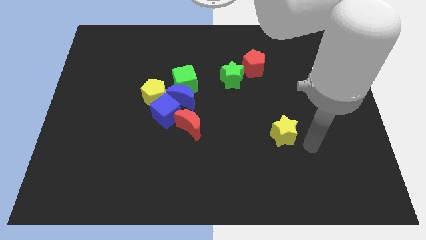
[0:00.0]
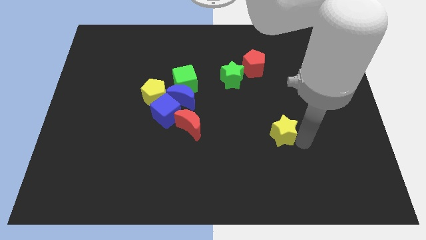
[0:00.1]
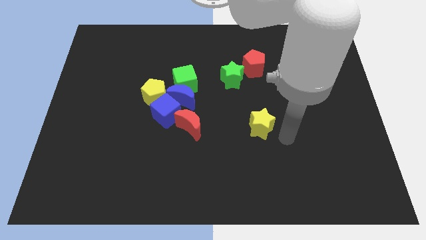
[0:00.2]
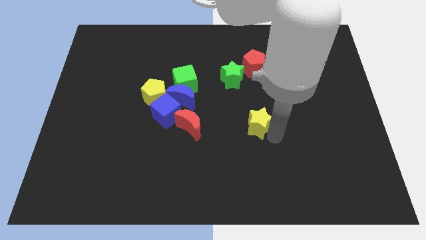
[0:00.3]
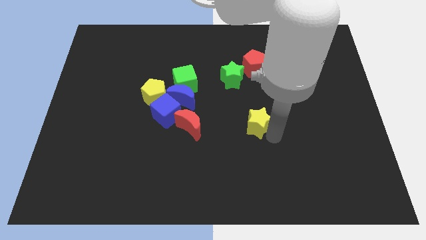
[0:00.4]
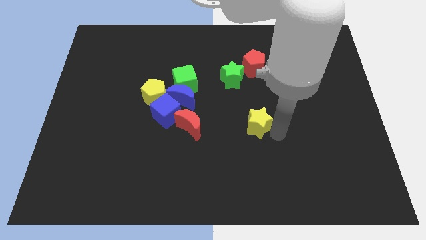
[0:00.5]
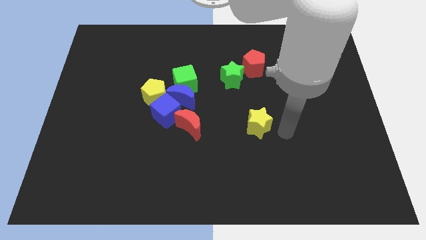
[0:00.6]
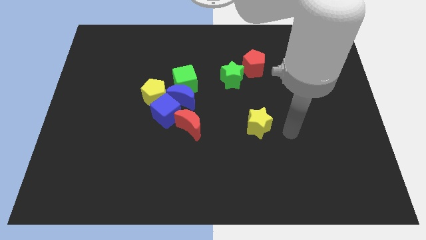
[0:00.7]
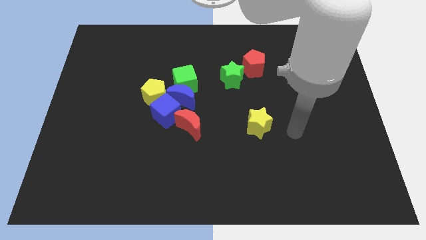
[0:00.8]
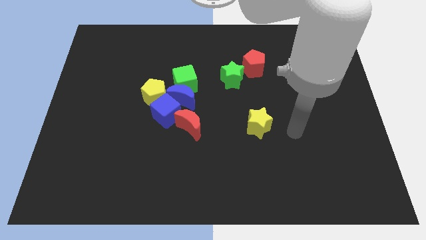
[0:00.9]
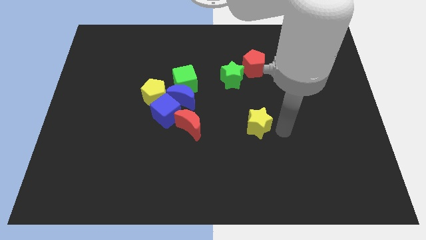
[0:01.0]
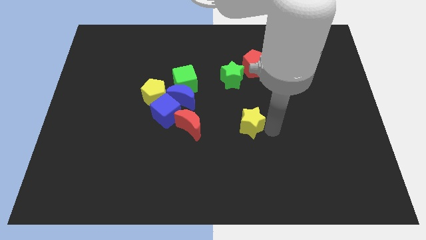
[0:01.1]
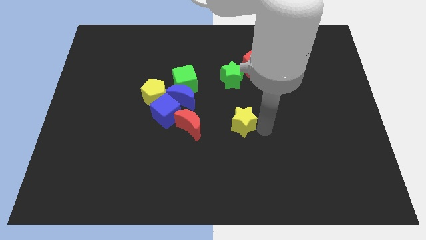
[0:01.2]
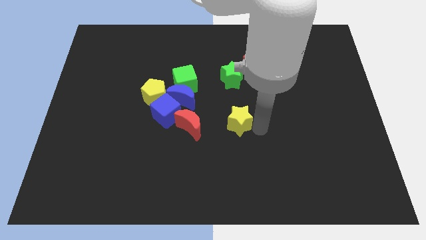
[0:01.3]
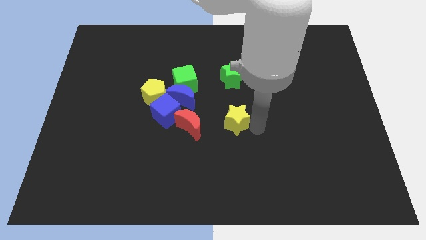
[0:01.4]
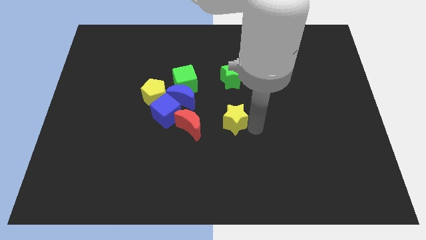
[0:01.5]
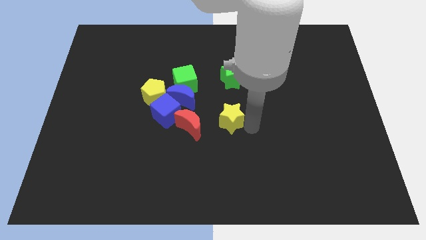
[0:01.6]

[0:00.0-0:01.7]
move the yellow star to the center of the board

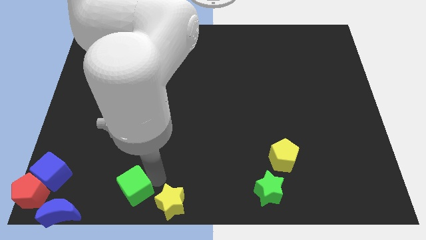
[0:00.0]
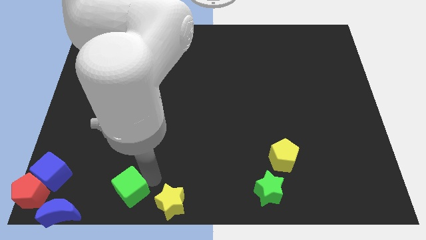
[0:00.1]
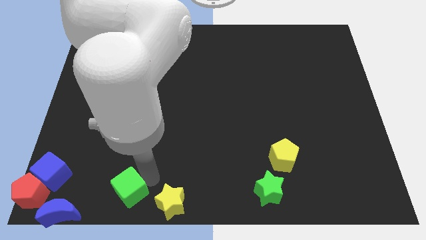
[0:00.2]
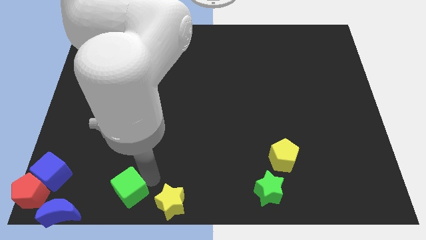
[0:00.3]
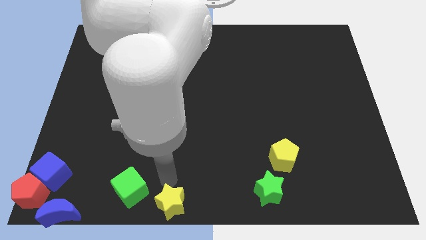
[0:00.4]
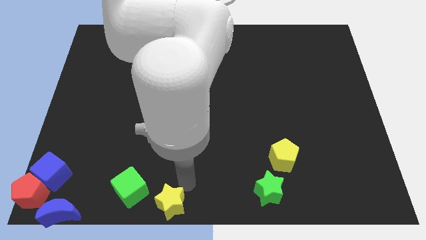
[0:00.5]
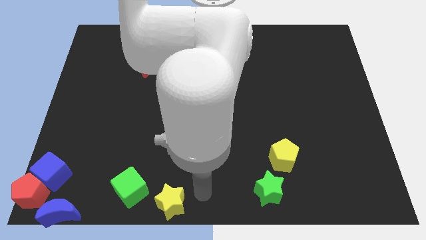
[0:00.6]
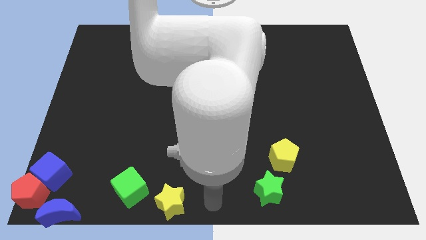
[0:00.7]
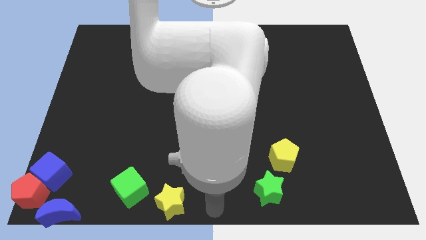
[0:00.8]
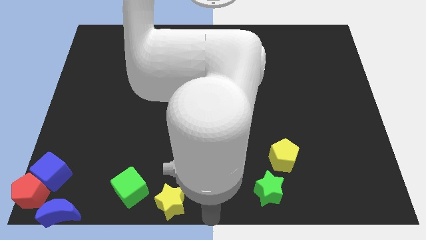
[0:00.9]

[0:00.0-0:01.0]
move arm in bottom center

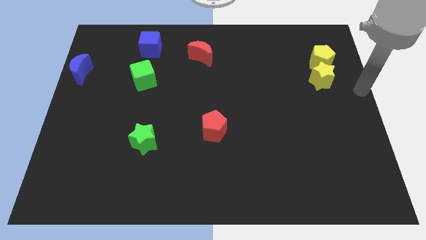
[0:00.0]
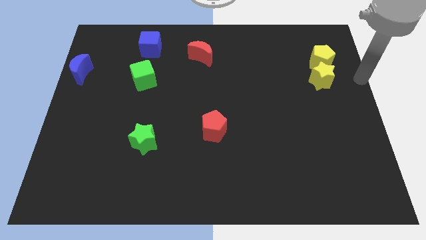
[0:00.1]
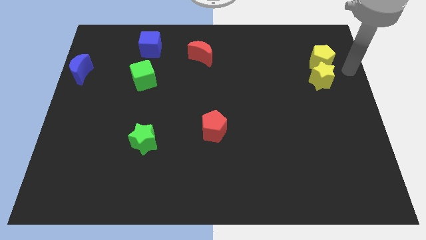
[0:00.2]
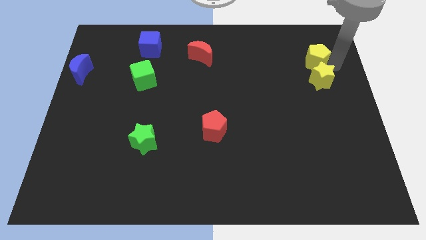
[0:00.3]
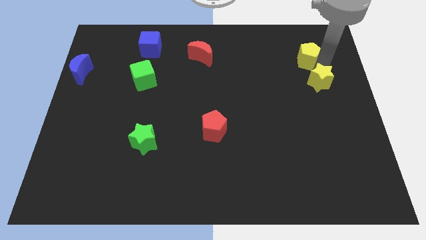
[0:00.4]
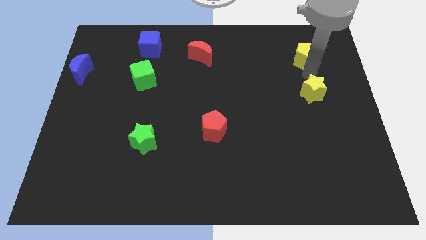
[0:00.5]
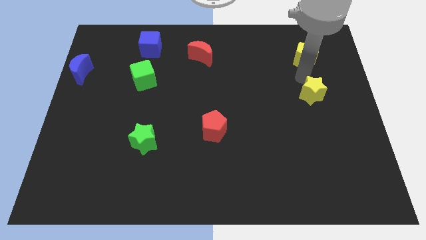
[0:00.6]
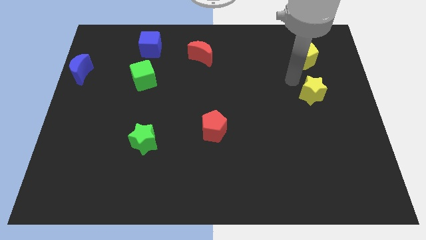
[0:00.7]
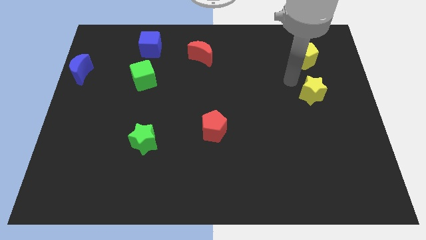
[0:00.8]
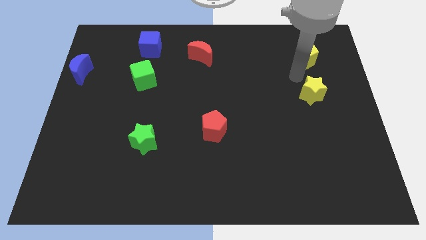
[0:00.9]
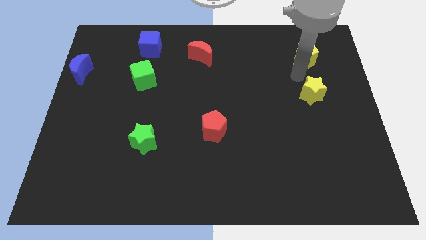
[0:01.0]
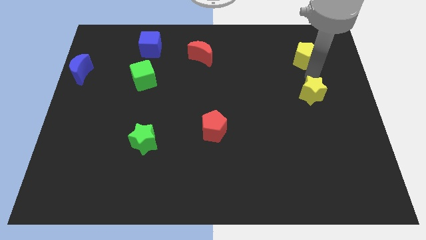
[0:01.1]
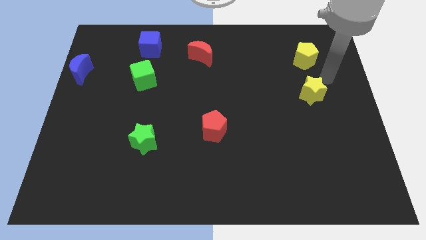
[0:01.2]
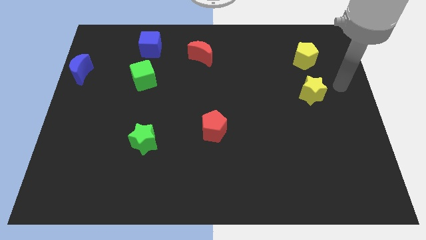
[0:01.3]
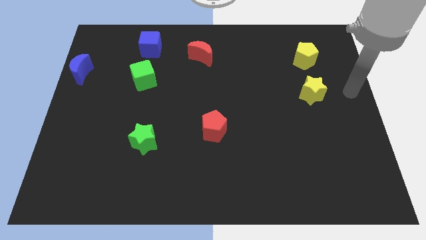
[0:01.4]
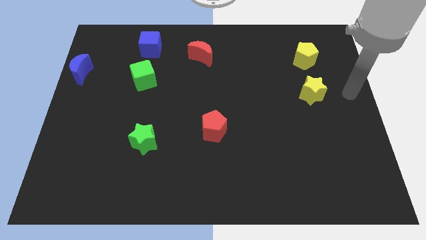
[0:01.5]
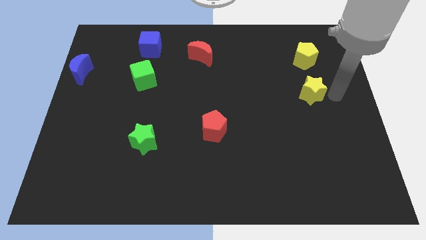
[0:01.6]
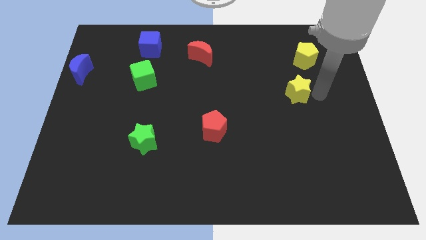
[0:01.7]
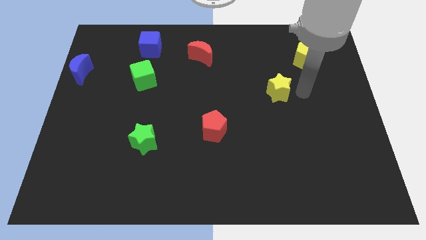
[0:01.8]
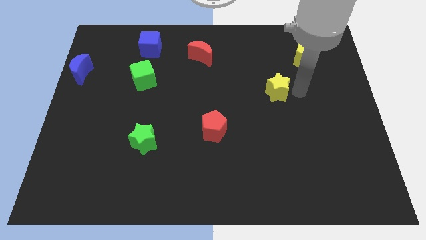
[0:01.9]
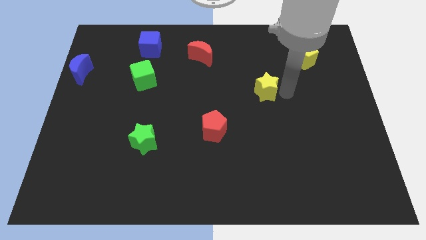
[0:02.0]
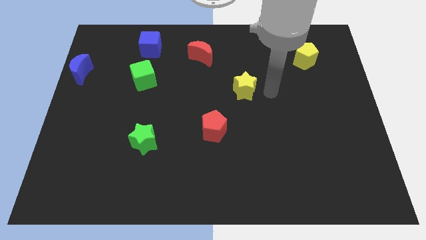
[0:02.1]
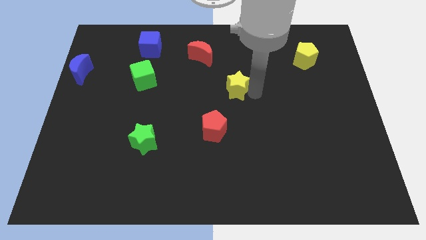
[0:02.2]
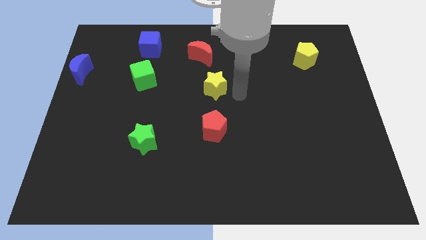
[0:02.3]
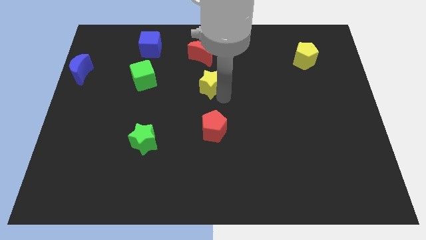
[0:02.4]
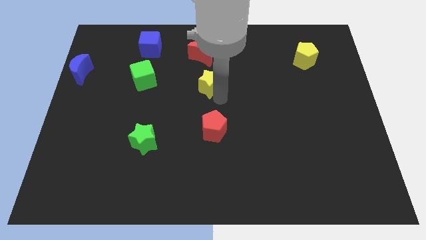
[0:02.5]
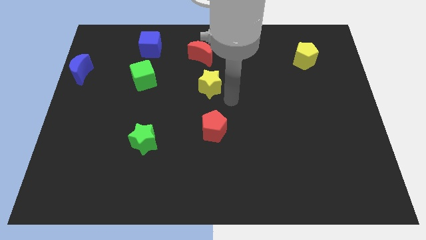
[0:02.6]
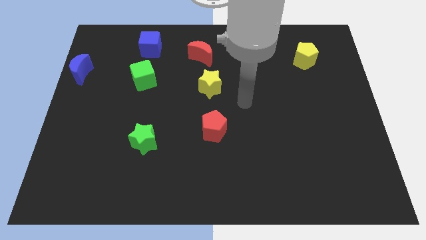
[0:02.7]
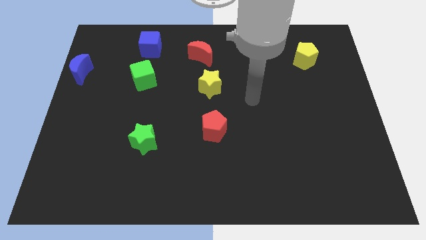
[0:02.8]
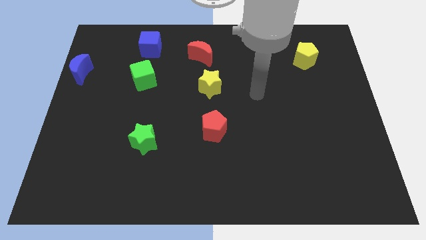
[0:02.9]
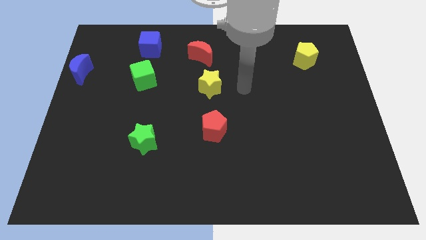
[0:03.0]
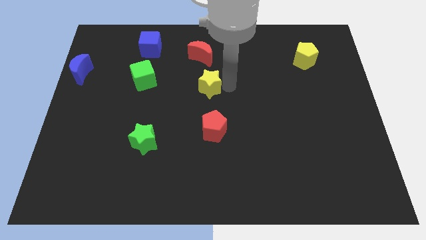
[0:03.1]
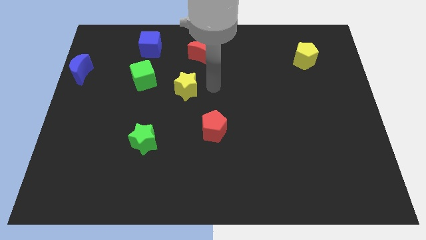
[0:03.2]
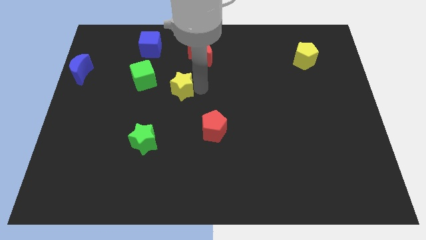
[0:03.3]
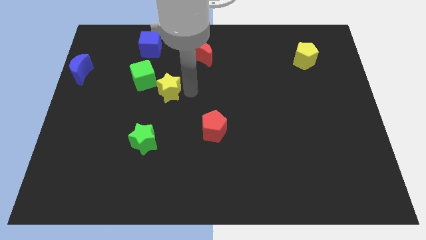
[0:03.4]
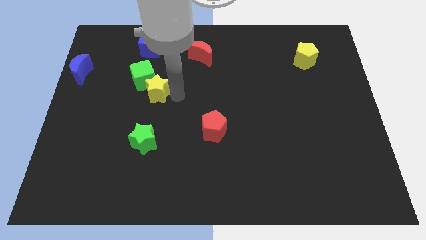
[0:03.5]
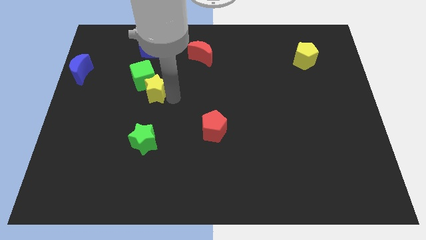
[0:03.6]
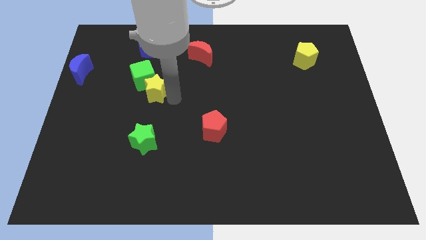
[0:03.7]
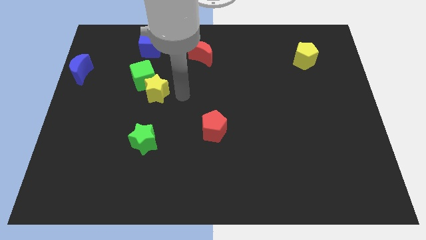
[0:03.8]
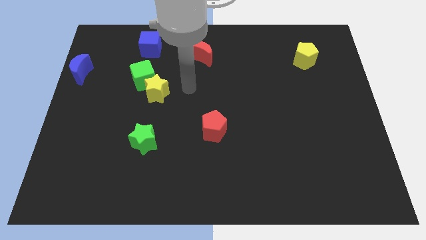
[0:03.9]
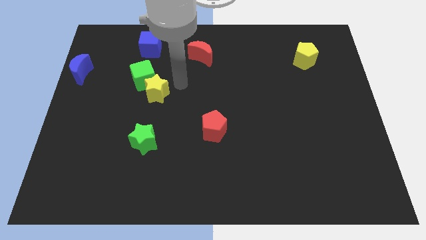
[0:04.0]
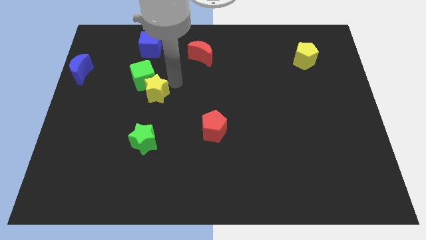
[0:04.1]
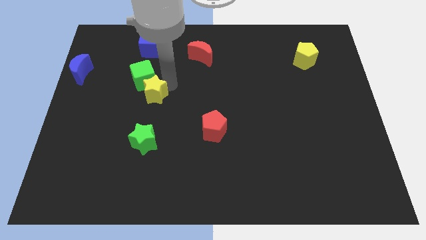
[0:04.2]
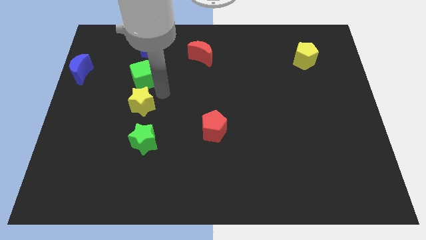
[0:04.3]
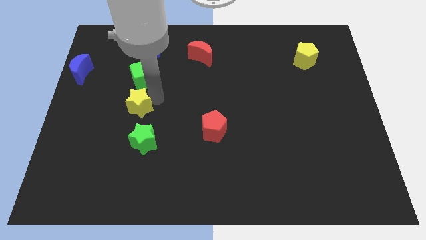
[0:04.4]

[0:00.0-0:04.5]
place the yellow star in between the green cube and green star

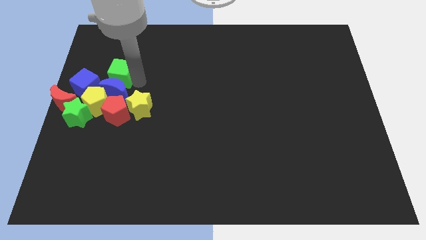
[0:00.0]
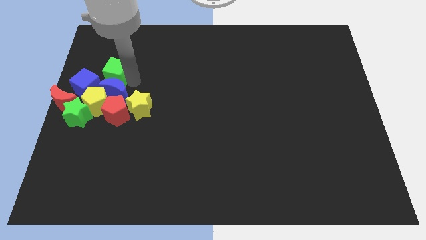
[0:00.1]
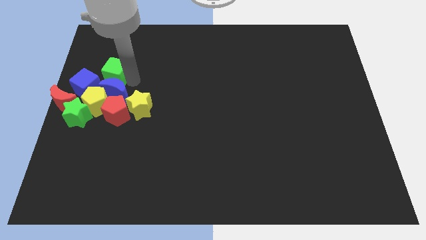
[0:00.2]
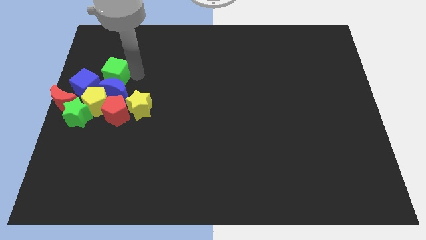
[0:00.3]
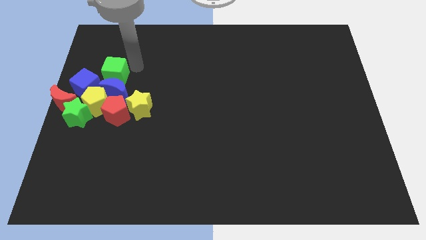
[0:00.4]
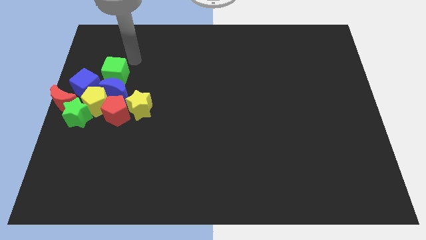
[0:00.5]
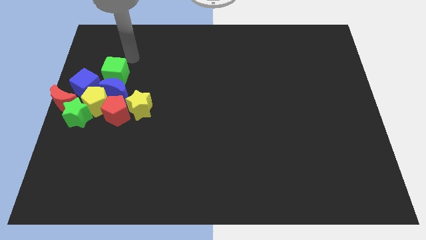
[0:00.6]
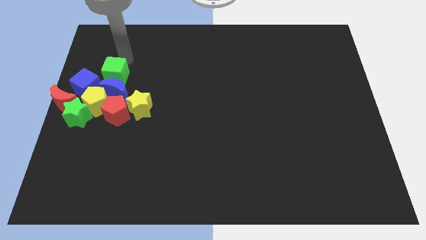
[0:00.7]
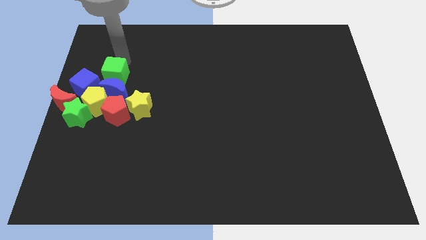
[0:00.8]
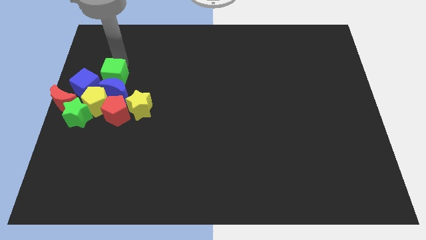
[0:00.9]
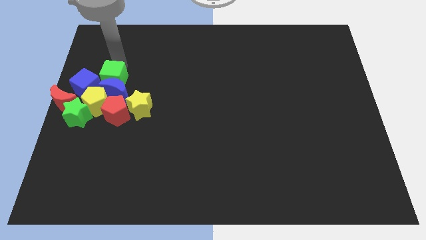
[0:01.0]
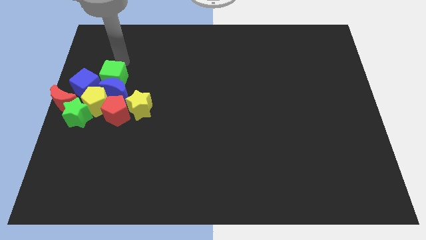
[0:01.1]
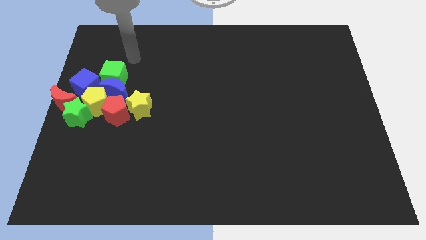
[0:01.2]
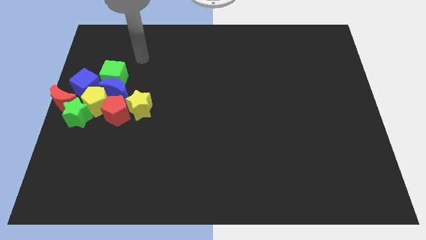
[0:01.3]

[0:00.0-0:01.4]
move the green cube to the top of the blue crescent

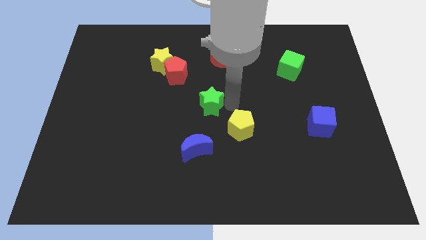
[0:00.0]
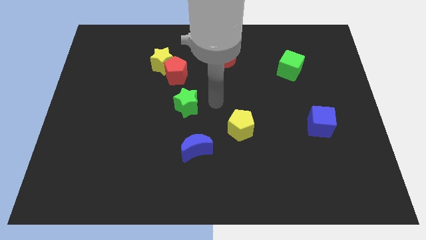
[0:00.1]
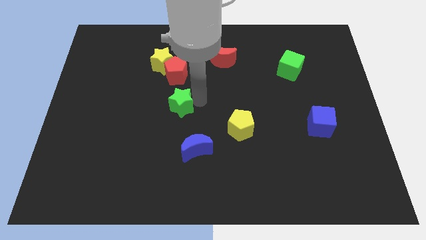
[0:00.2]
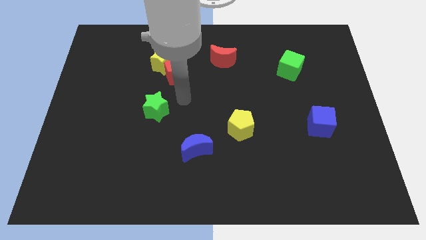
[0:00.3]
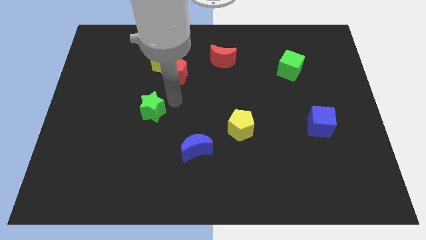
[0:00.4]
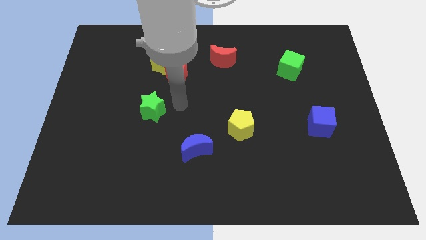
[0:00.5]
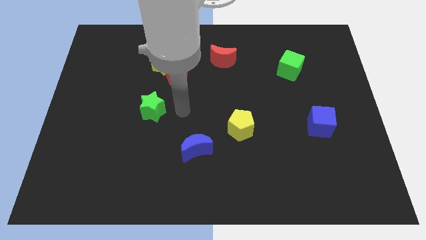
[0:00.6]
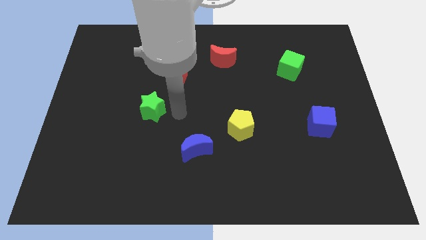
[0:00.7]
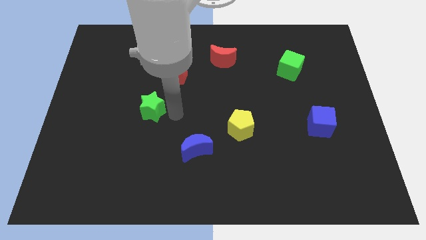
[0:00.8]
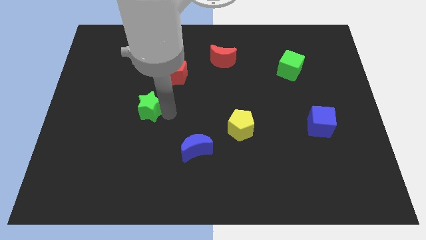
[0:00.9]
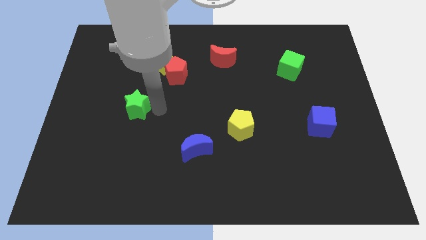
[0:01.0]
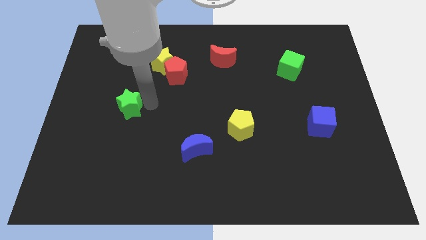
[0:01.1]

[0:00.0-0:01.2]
push the green star towards left
